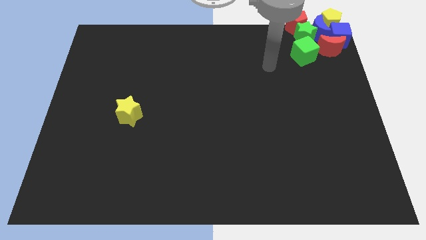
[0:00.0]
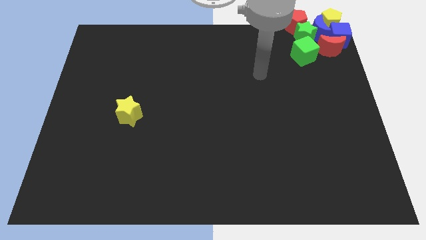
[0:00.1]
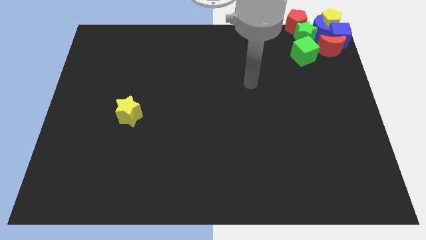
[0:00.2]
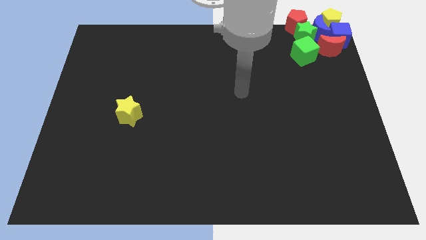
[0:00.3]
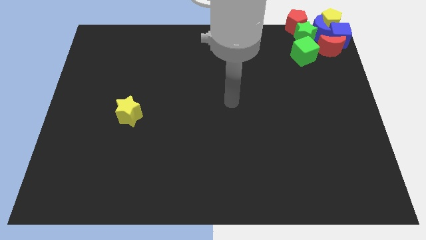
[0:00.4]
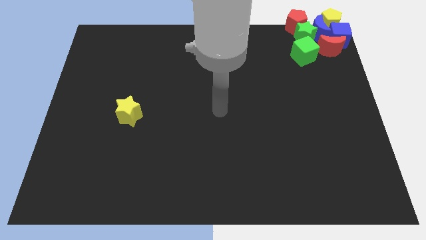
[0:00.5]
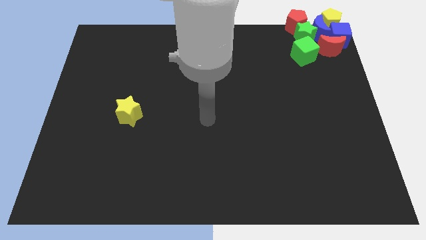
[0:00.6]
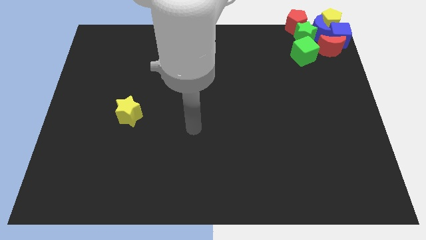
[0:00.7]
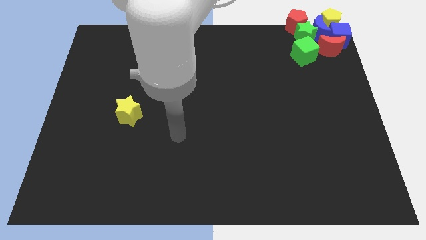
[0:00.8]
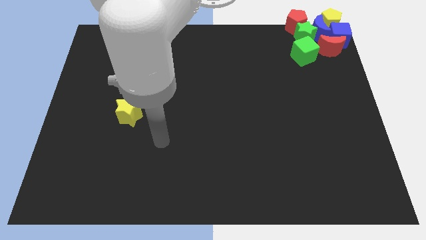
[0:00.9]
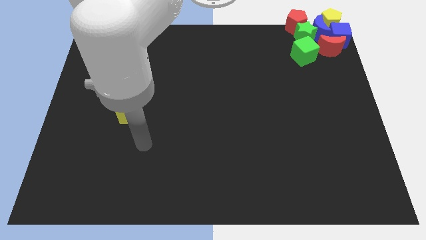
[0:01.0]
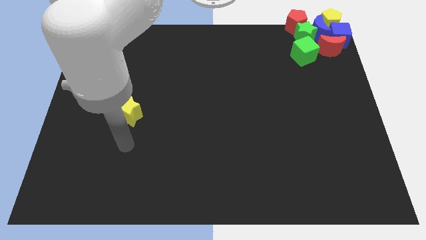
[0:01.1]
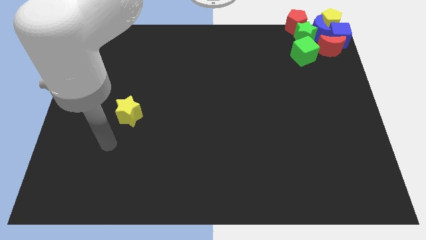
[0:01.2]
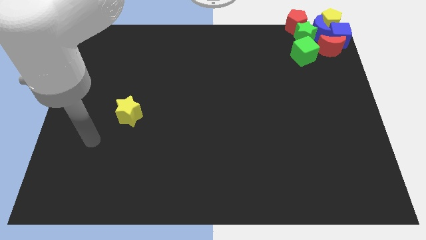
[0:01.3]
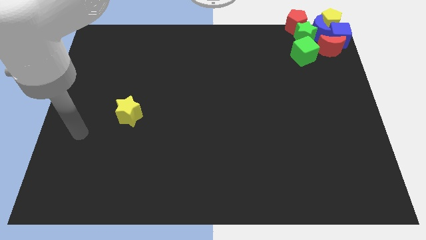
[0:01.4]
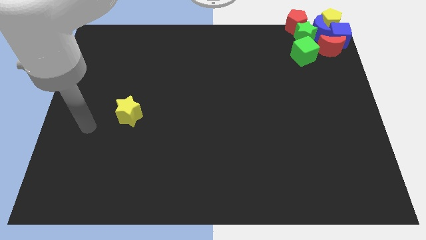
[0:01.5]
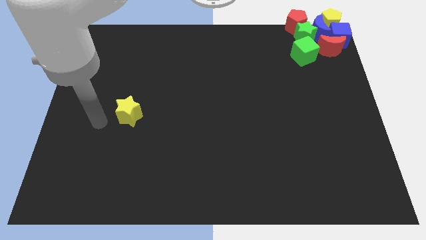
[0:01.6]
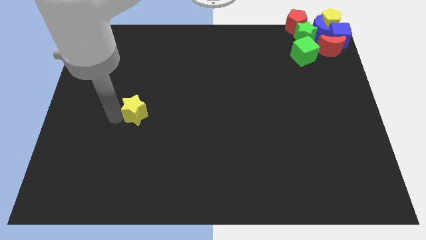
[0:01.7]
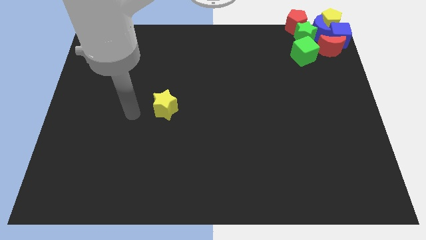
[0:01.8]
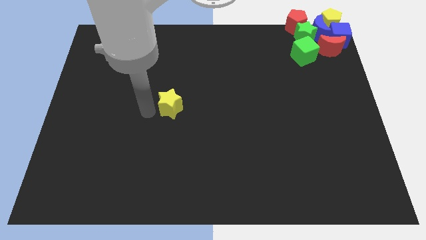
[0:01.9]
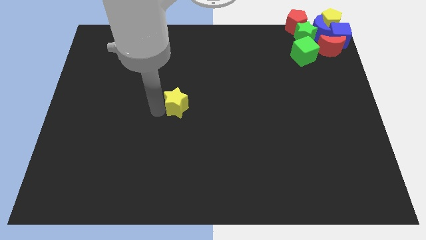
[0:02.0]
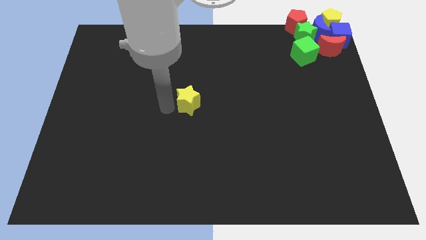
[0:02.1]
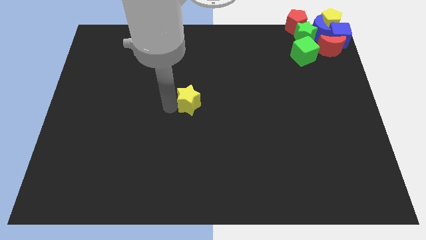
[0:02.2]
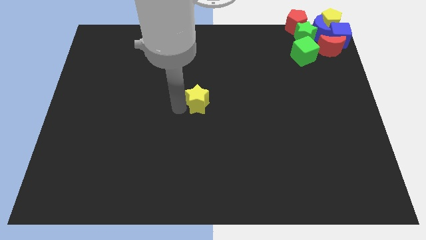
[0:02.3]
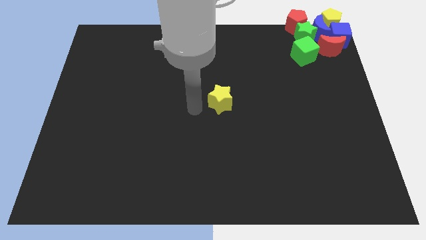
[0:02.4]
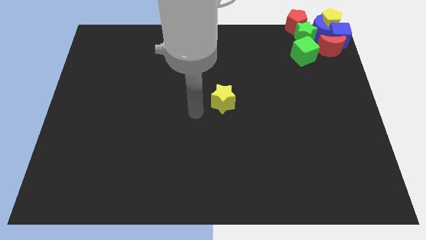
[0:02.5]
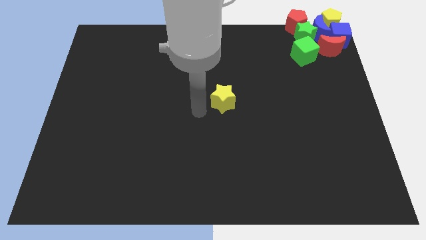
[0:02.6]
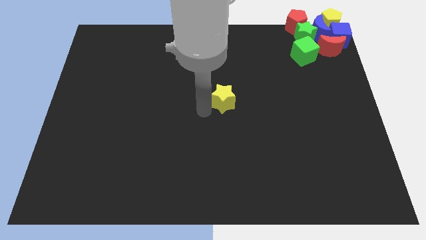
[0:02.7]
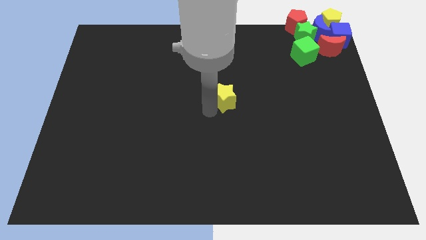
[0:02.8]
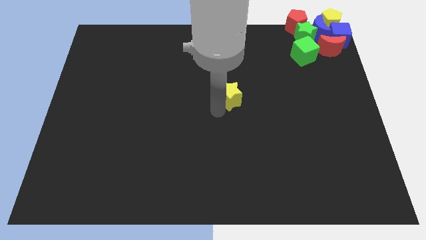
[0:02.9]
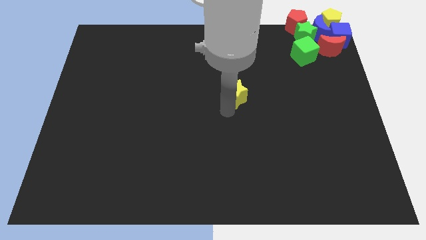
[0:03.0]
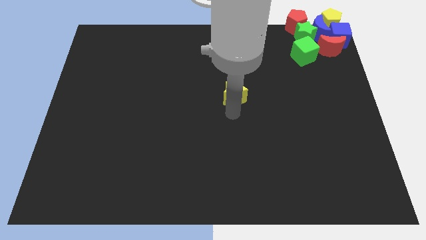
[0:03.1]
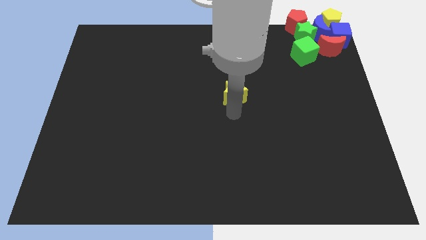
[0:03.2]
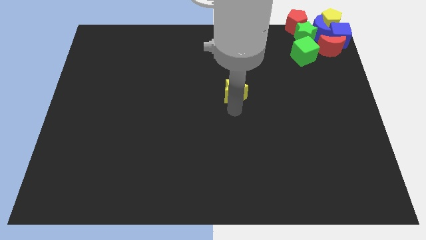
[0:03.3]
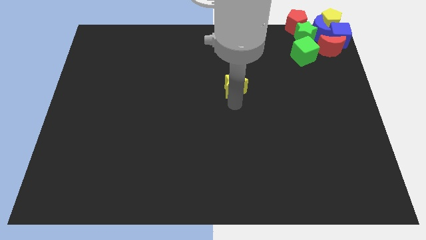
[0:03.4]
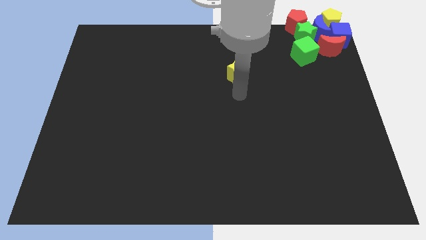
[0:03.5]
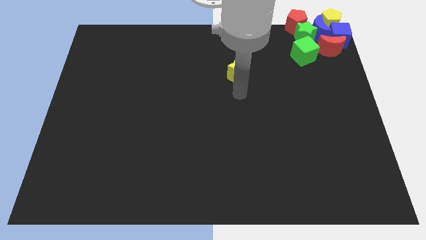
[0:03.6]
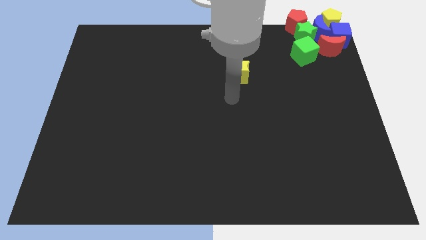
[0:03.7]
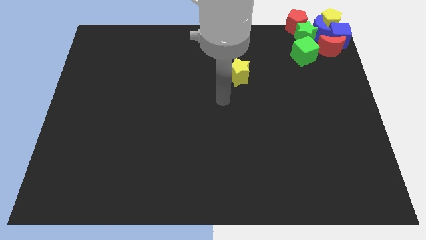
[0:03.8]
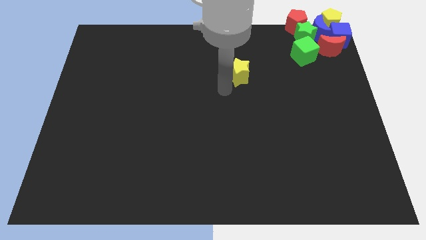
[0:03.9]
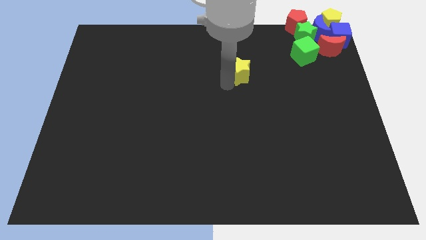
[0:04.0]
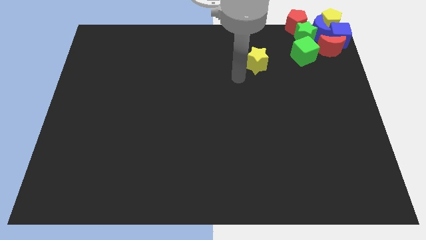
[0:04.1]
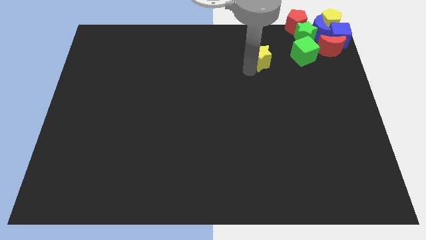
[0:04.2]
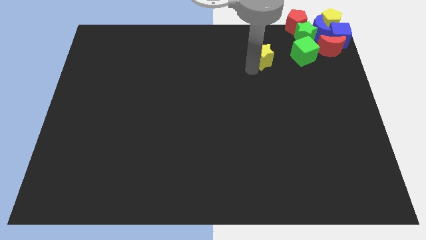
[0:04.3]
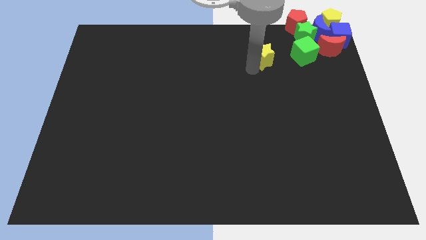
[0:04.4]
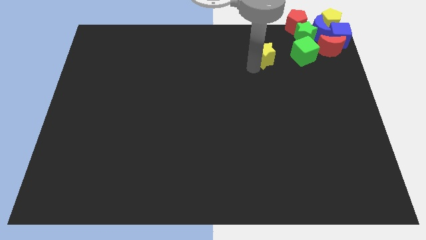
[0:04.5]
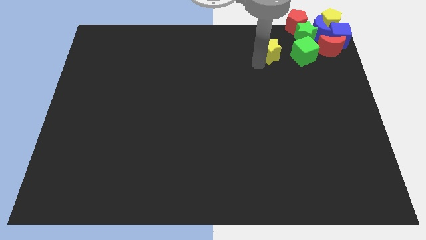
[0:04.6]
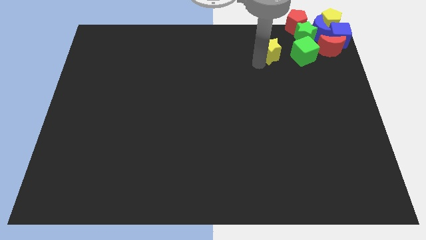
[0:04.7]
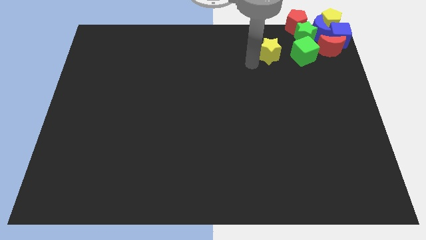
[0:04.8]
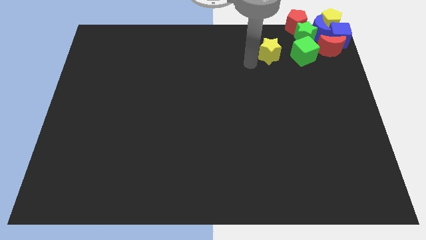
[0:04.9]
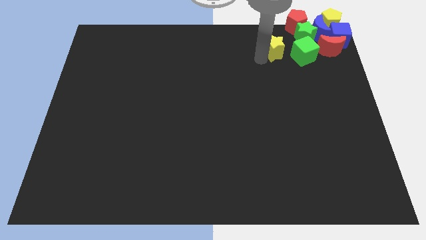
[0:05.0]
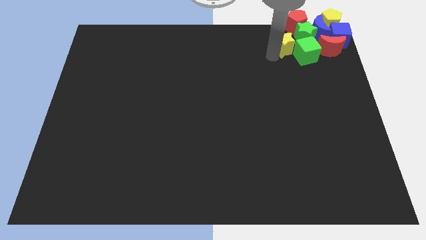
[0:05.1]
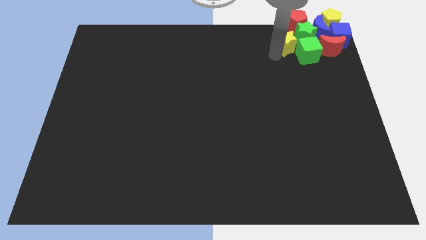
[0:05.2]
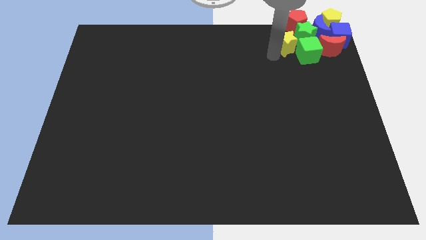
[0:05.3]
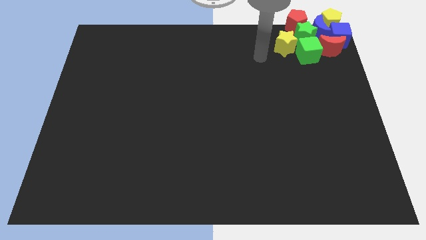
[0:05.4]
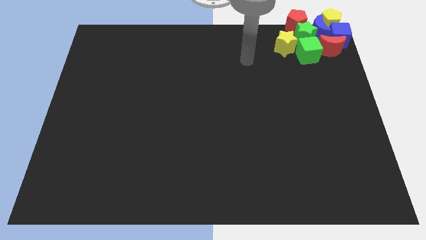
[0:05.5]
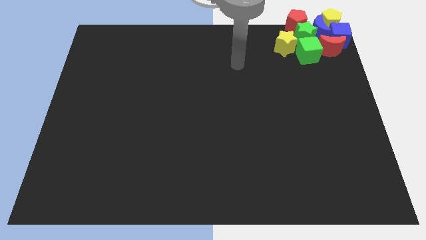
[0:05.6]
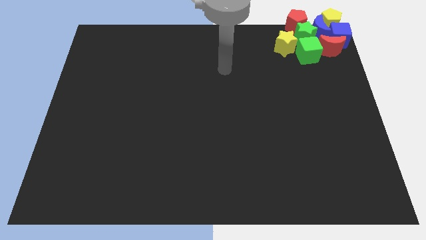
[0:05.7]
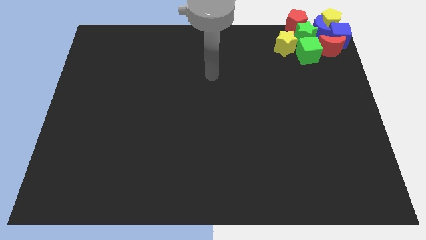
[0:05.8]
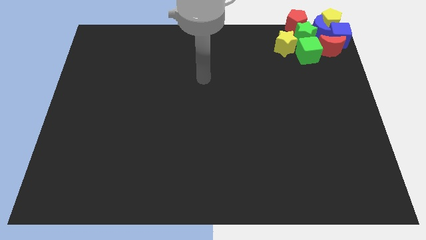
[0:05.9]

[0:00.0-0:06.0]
move the yellow star into the group of objects

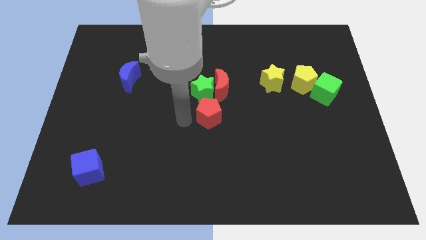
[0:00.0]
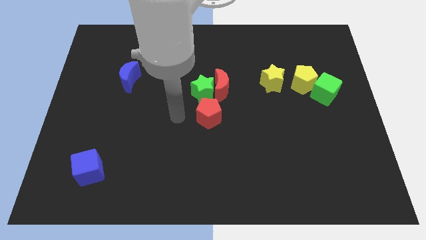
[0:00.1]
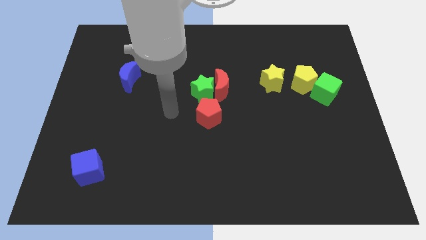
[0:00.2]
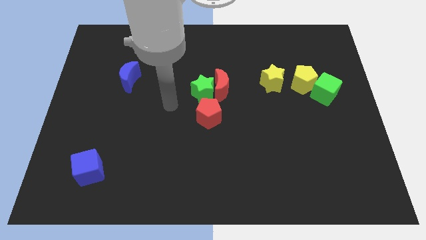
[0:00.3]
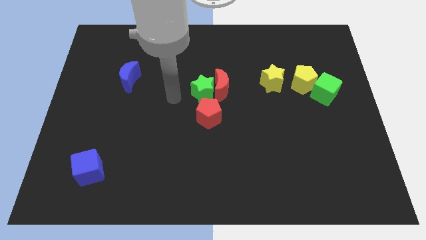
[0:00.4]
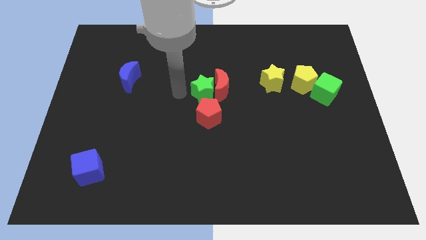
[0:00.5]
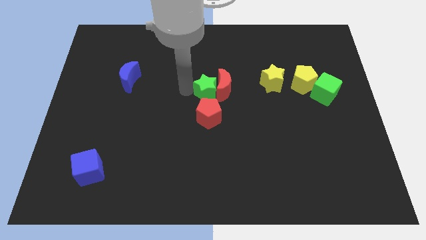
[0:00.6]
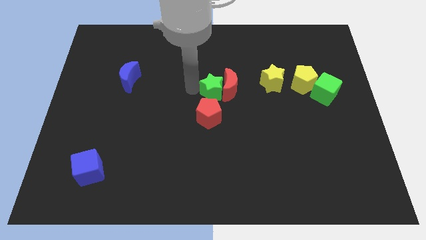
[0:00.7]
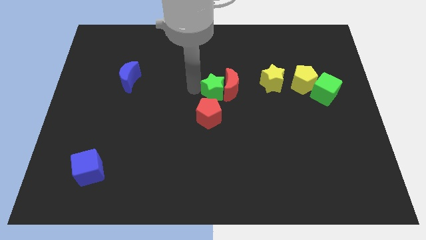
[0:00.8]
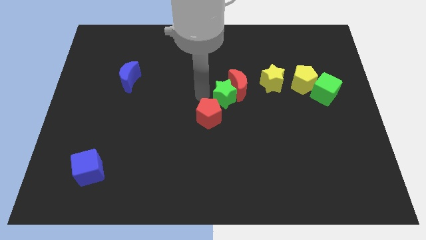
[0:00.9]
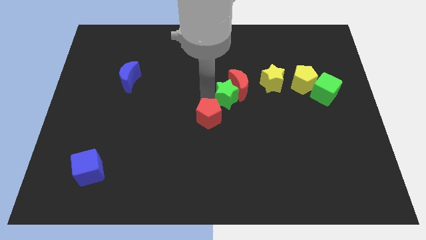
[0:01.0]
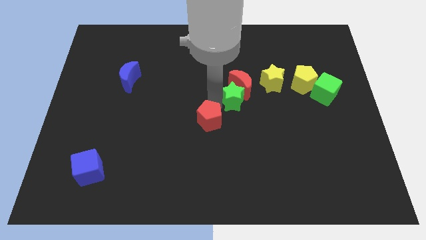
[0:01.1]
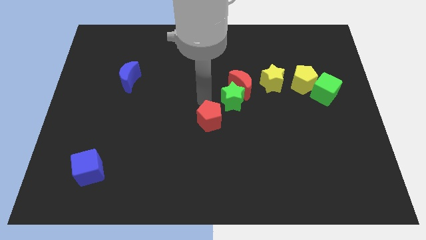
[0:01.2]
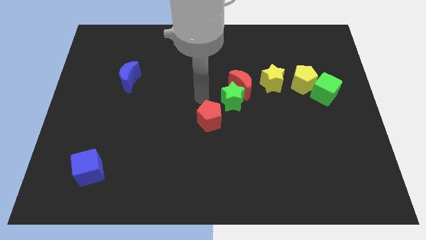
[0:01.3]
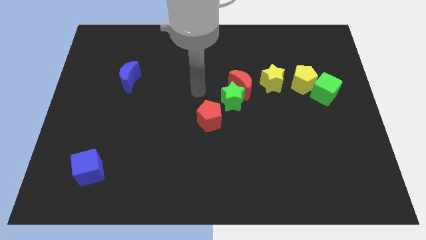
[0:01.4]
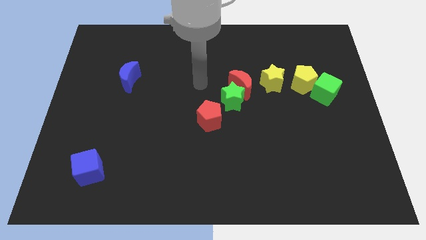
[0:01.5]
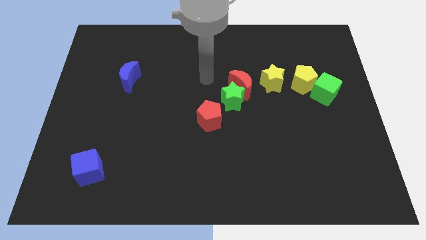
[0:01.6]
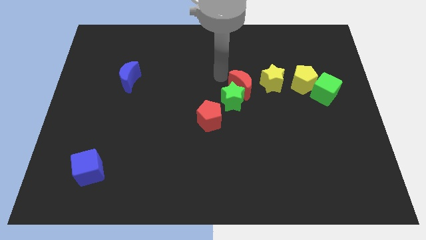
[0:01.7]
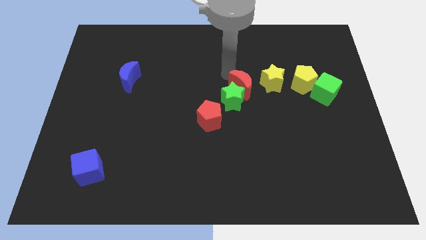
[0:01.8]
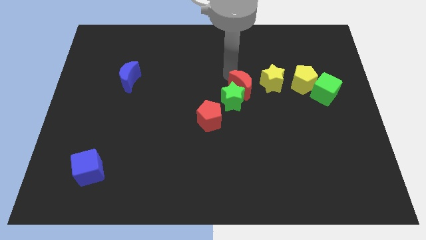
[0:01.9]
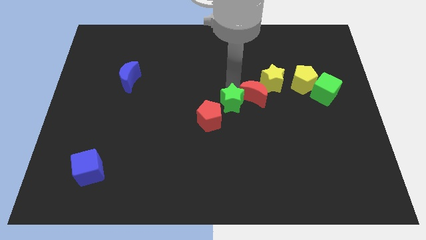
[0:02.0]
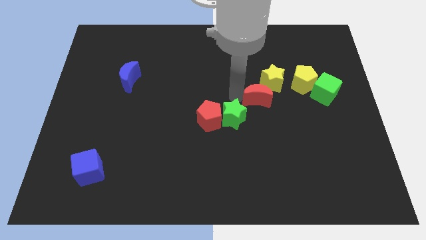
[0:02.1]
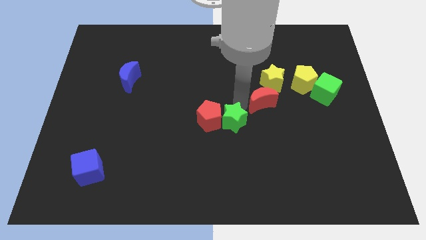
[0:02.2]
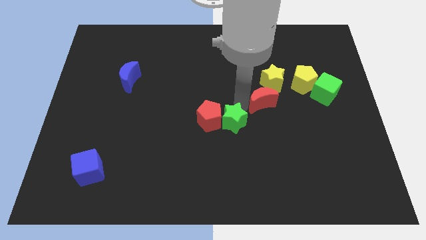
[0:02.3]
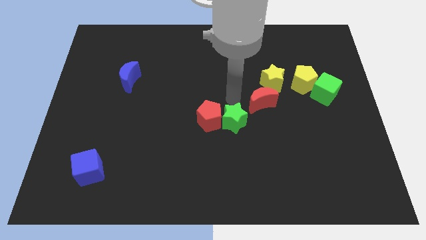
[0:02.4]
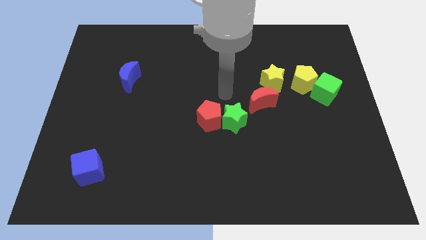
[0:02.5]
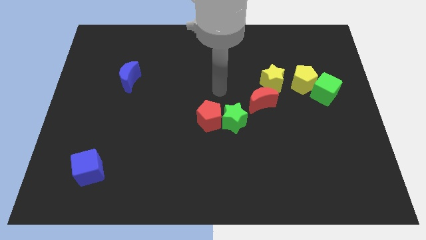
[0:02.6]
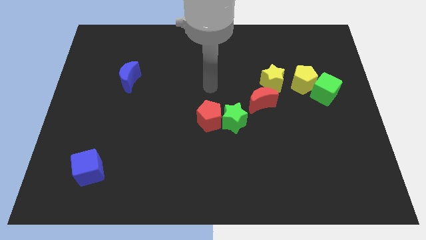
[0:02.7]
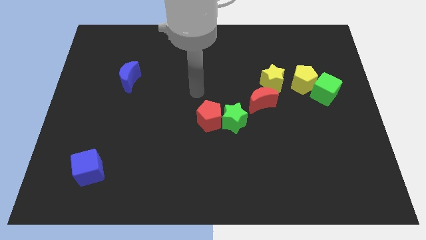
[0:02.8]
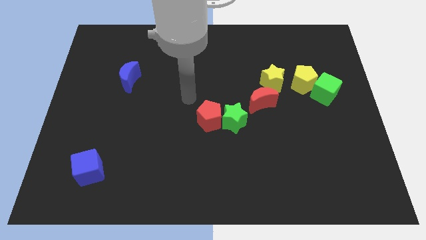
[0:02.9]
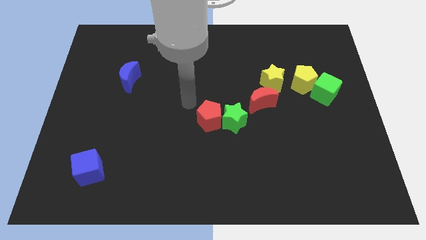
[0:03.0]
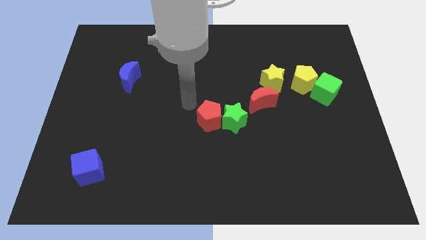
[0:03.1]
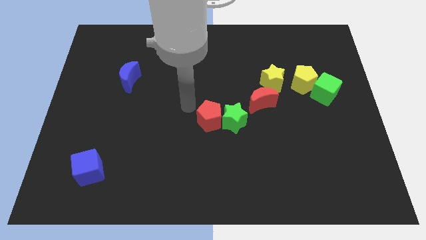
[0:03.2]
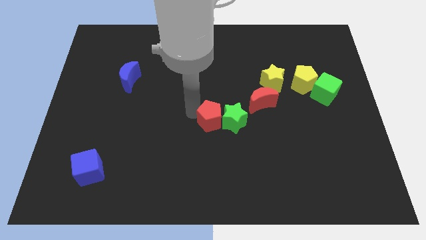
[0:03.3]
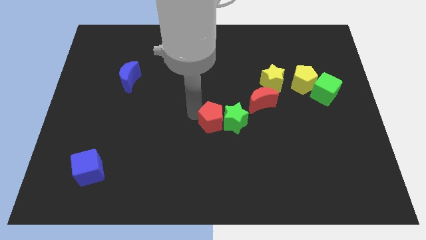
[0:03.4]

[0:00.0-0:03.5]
move the green star to the right of the red pentagon
